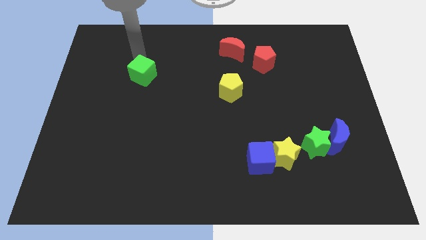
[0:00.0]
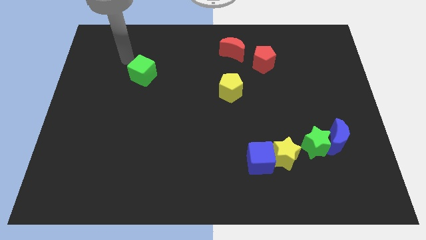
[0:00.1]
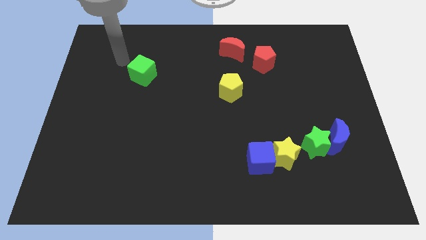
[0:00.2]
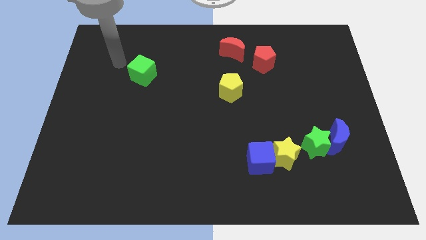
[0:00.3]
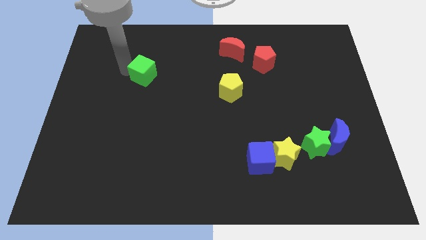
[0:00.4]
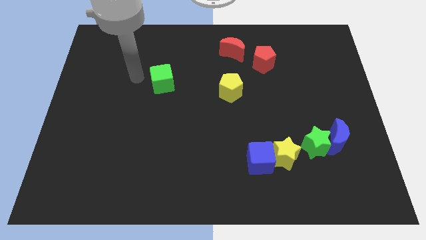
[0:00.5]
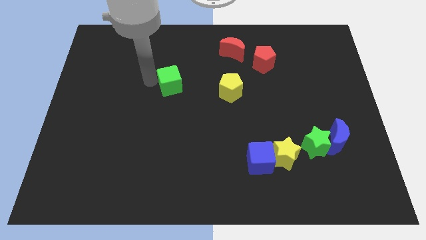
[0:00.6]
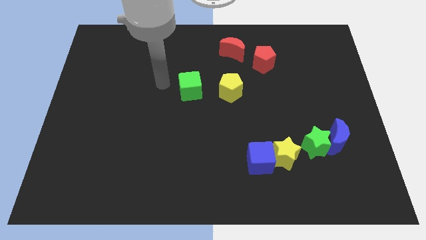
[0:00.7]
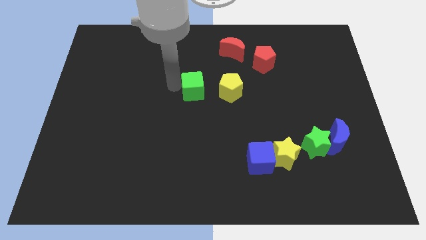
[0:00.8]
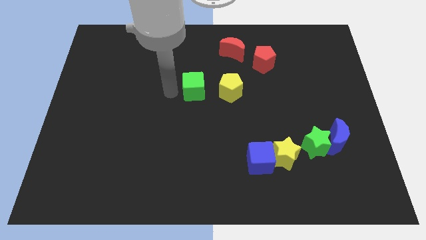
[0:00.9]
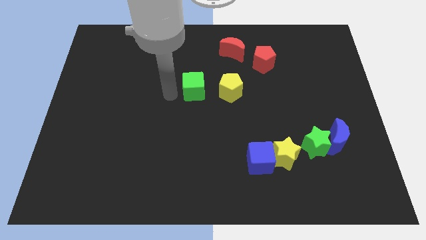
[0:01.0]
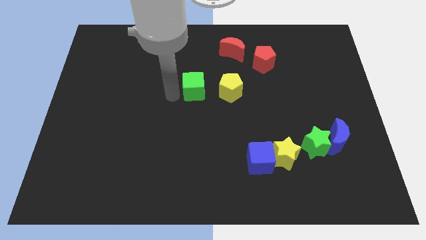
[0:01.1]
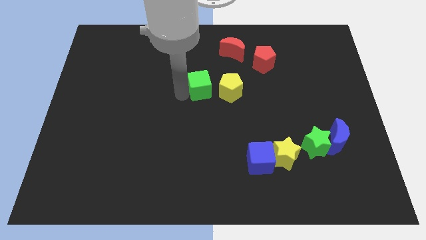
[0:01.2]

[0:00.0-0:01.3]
push the green cube to the left of the yellow pentagon

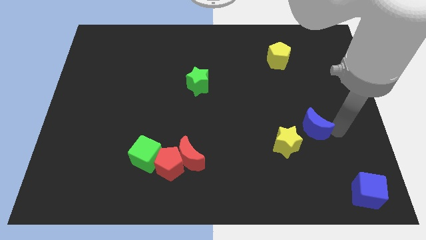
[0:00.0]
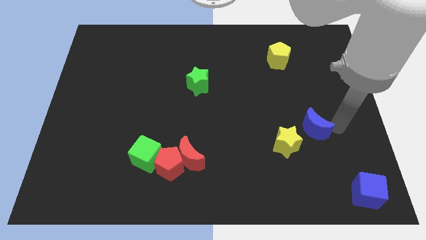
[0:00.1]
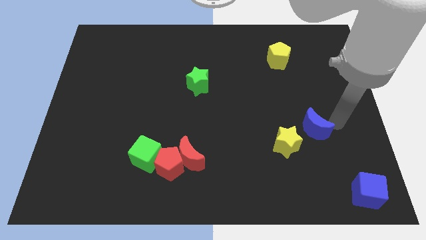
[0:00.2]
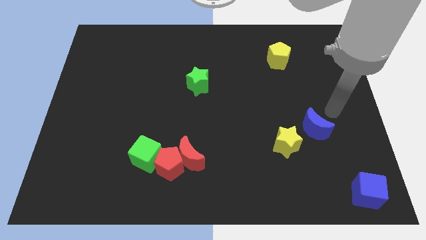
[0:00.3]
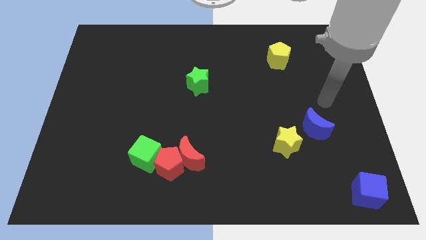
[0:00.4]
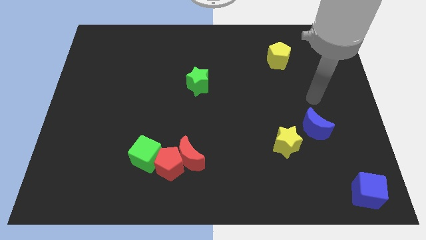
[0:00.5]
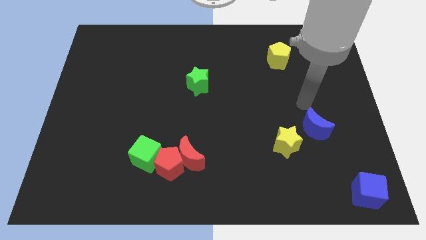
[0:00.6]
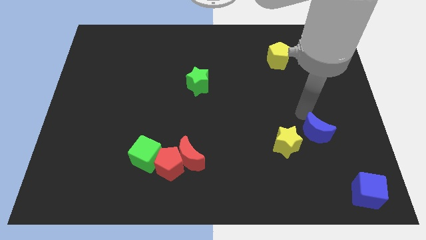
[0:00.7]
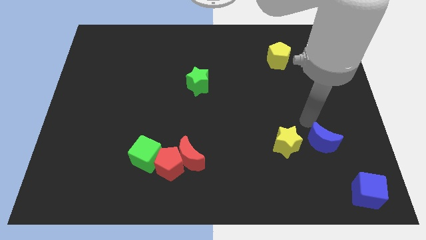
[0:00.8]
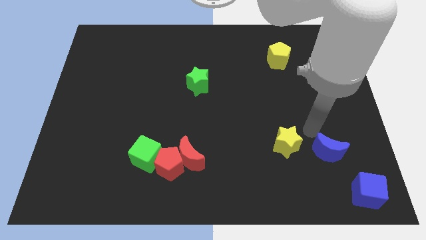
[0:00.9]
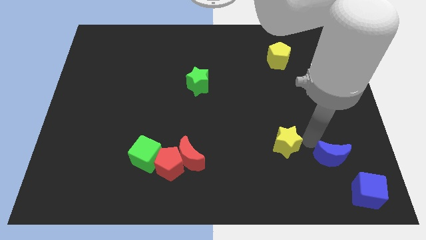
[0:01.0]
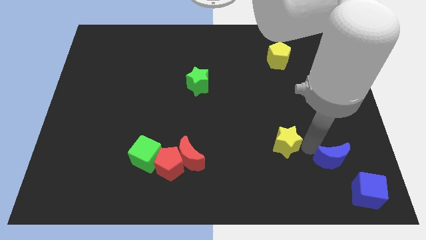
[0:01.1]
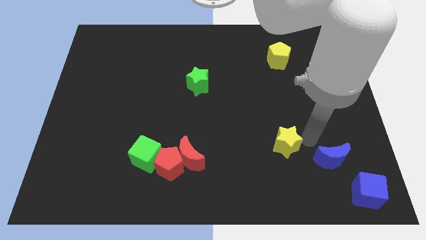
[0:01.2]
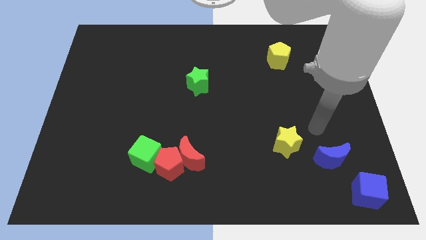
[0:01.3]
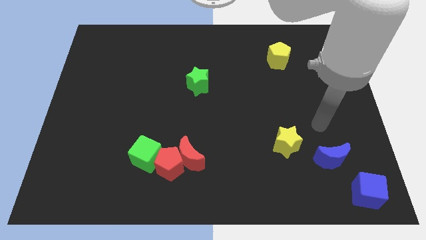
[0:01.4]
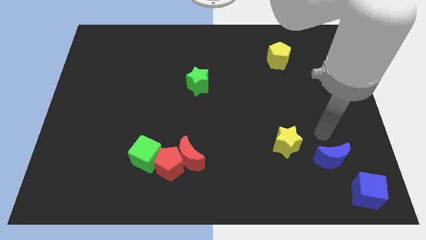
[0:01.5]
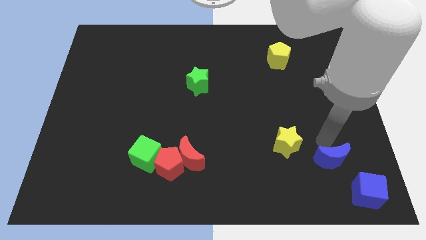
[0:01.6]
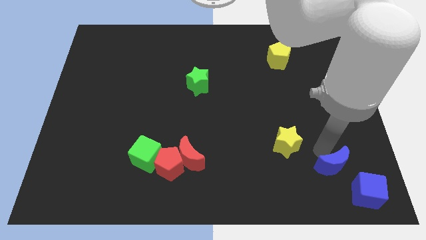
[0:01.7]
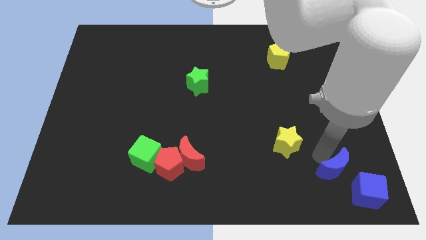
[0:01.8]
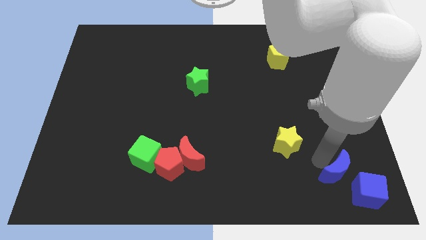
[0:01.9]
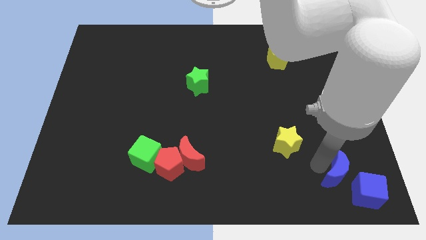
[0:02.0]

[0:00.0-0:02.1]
place the blue moon in between the blue cube and yellow star

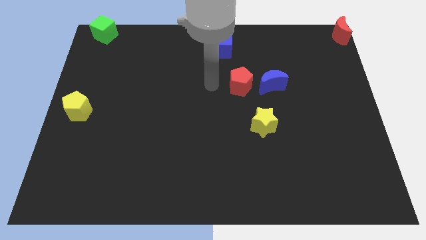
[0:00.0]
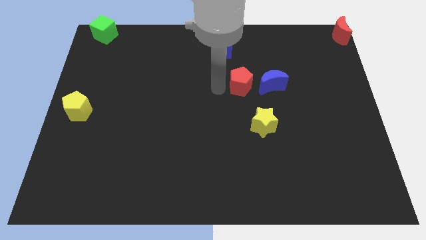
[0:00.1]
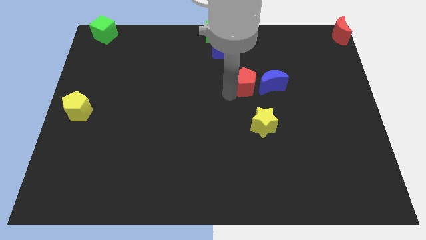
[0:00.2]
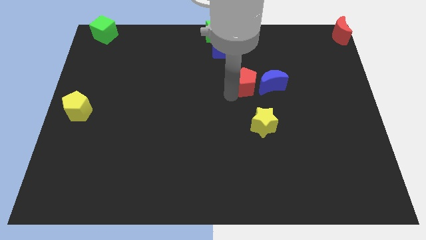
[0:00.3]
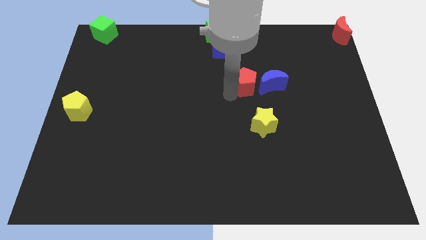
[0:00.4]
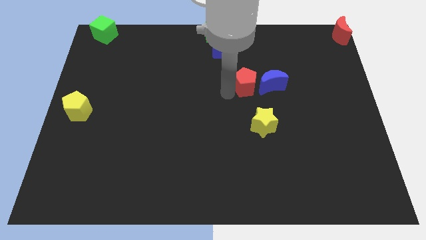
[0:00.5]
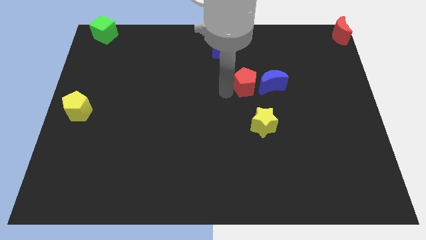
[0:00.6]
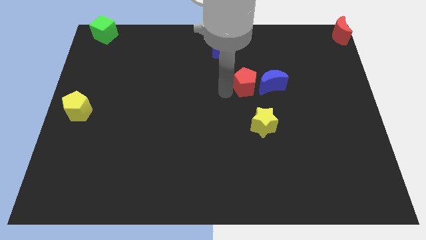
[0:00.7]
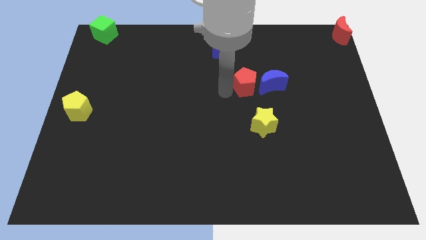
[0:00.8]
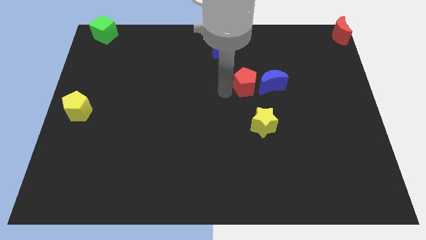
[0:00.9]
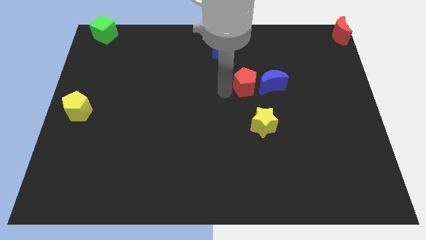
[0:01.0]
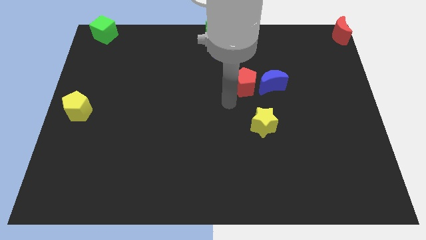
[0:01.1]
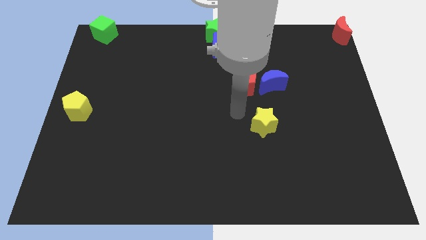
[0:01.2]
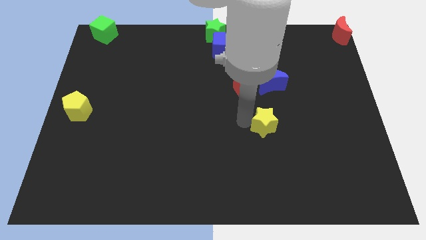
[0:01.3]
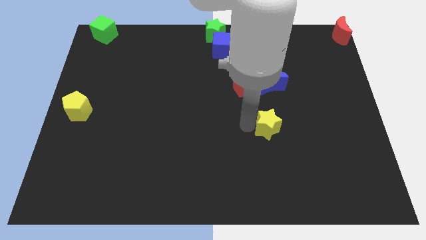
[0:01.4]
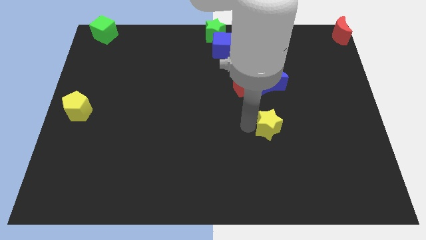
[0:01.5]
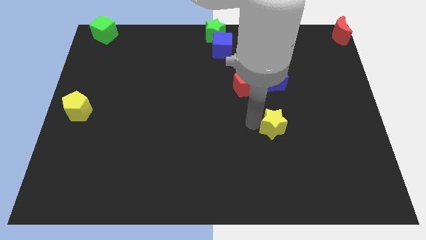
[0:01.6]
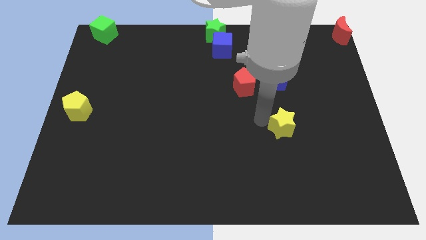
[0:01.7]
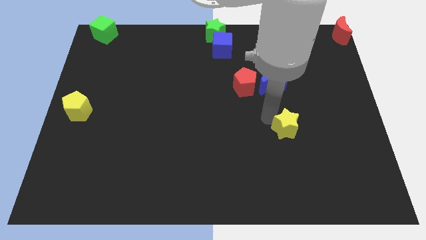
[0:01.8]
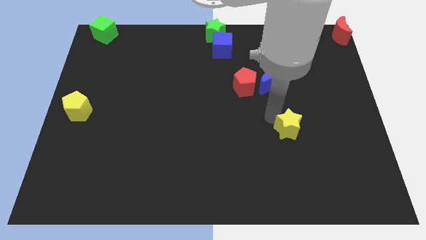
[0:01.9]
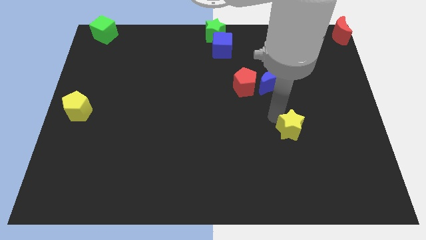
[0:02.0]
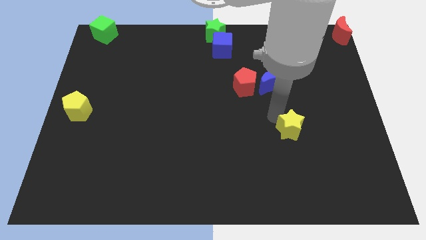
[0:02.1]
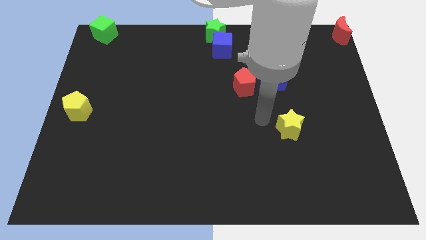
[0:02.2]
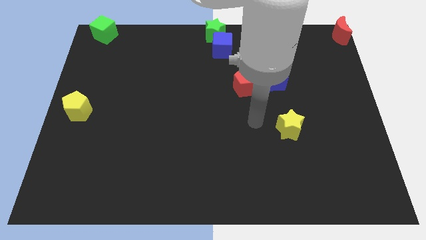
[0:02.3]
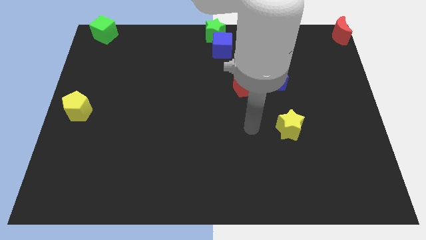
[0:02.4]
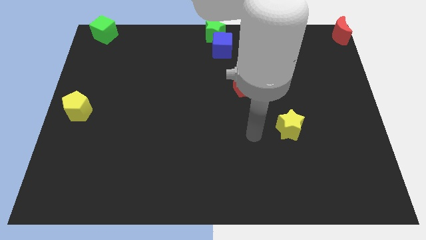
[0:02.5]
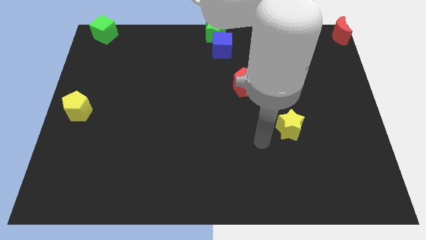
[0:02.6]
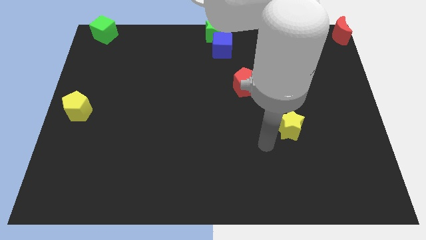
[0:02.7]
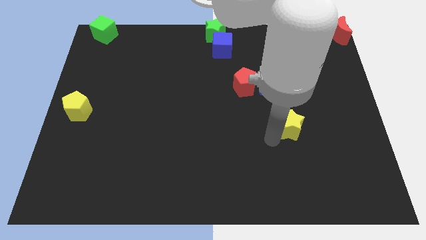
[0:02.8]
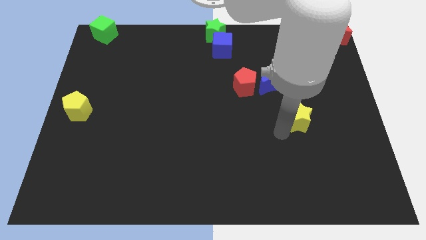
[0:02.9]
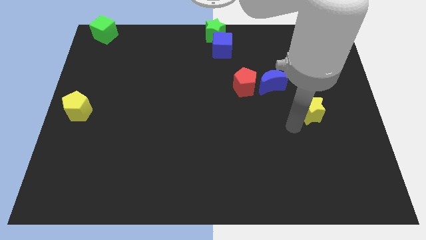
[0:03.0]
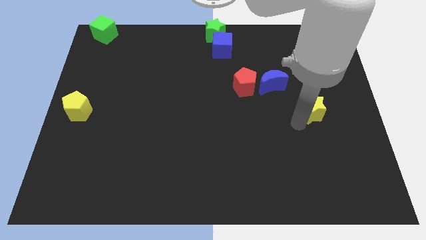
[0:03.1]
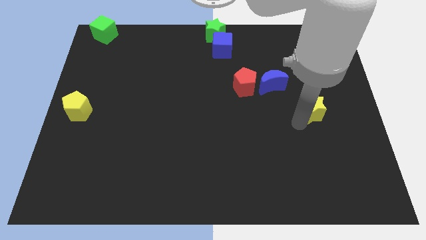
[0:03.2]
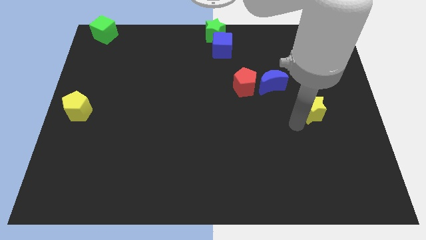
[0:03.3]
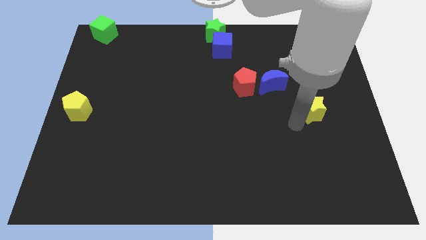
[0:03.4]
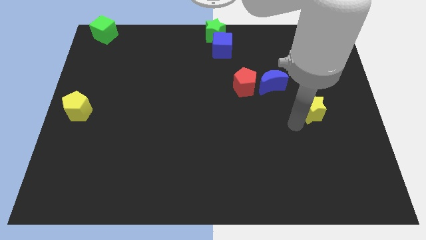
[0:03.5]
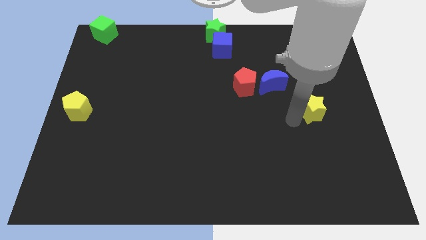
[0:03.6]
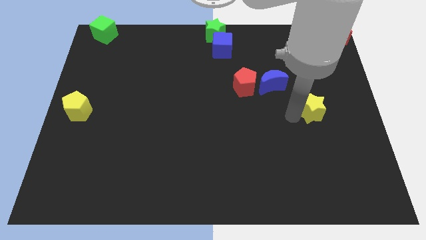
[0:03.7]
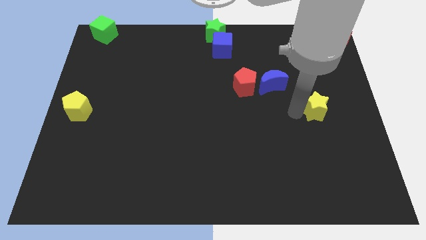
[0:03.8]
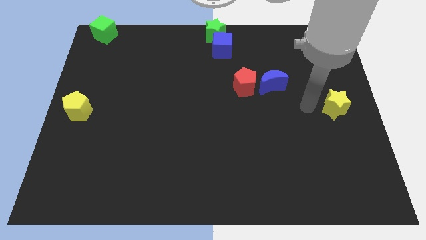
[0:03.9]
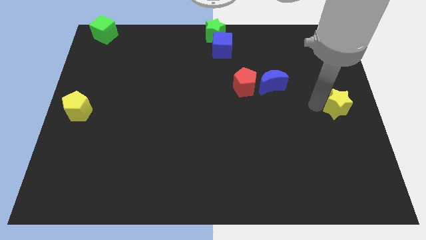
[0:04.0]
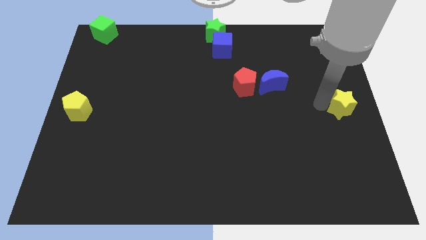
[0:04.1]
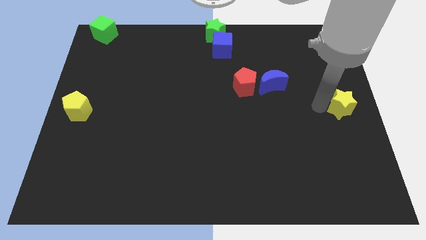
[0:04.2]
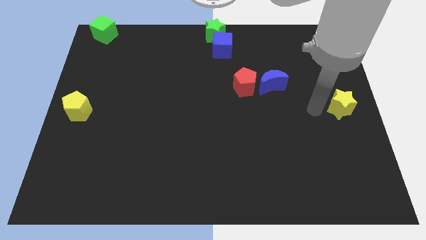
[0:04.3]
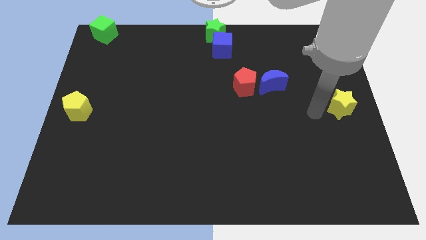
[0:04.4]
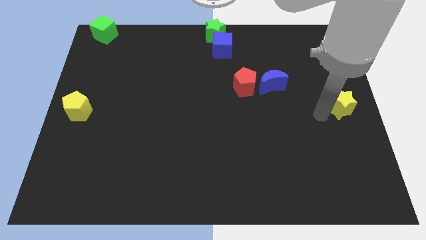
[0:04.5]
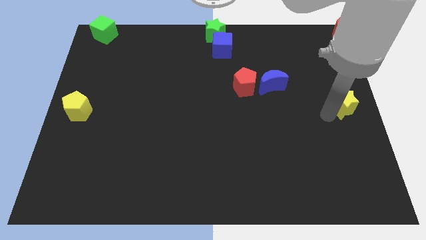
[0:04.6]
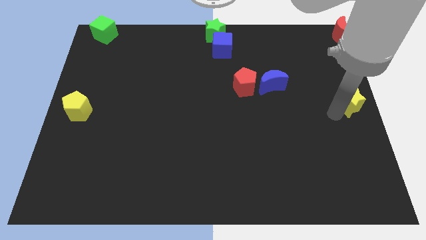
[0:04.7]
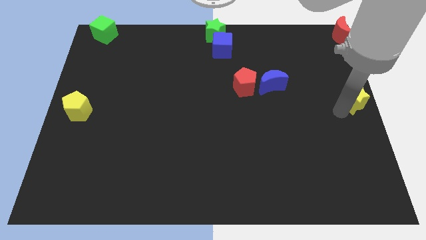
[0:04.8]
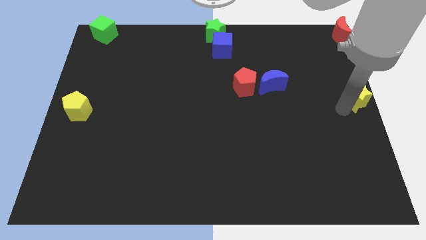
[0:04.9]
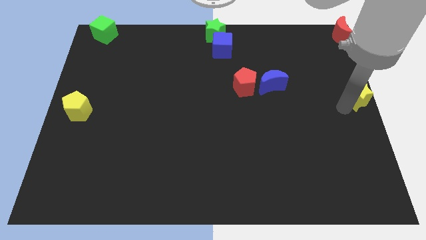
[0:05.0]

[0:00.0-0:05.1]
push the yellow star to the right center

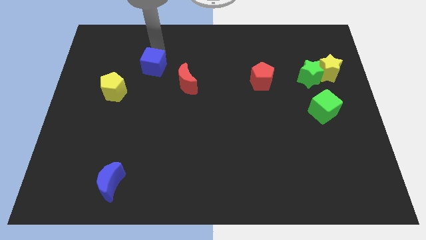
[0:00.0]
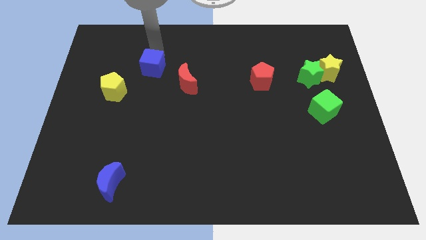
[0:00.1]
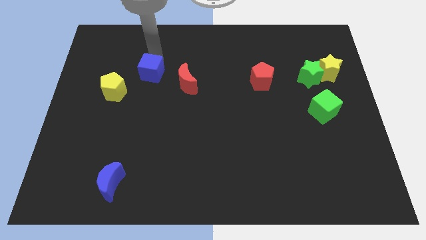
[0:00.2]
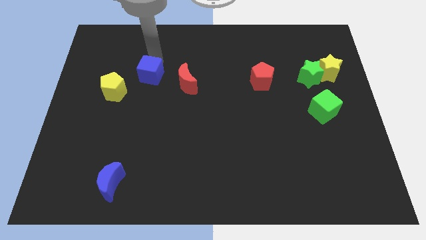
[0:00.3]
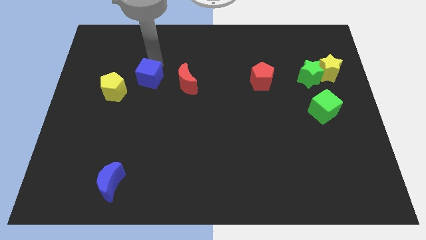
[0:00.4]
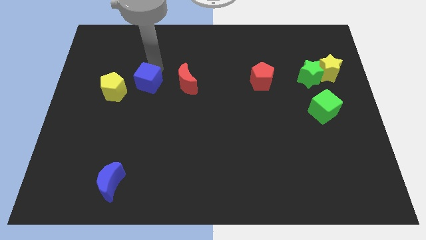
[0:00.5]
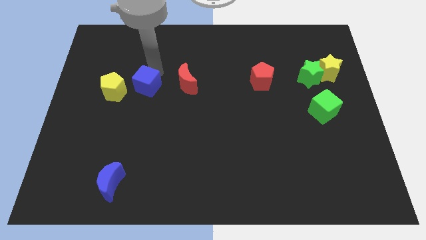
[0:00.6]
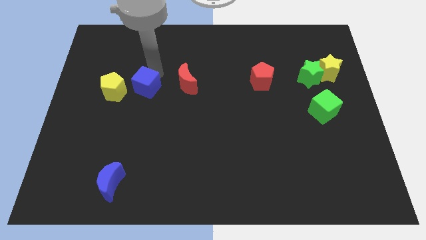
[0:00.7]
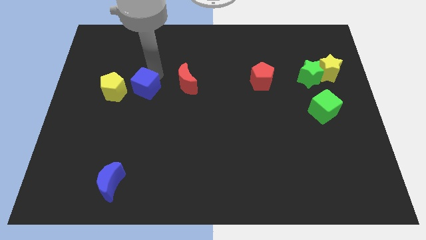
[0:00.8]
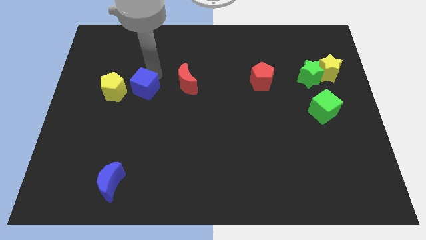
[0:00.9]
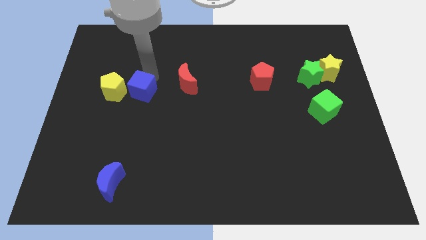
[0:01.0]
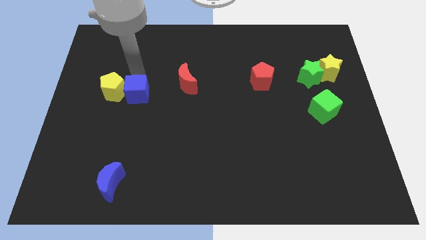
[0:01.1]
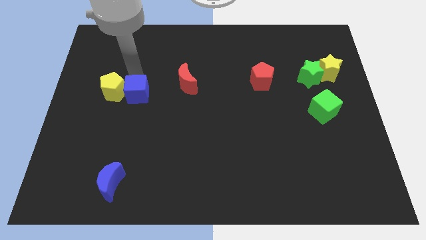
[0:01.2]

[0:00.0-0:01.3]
place the blue cube to the right of the yellow pentagon
